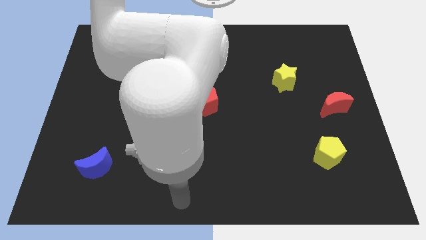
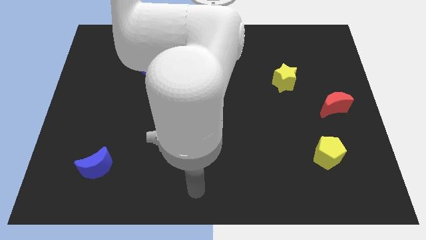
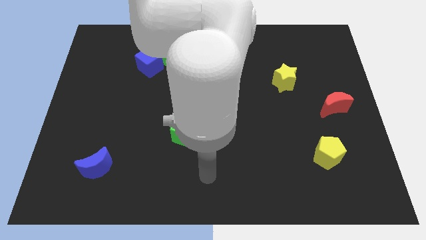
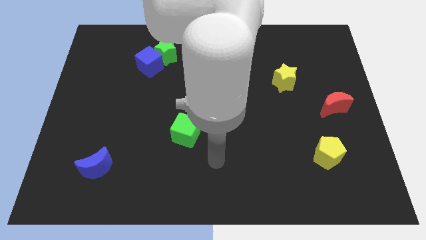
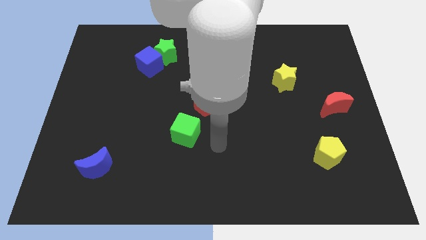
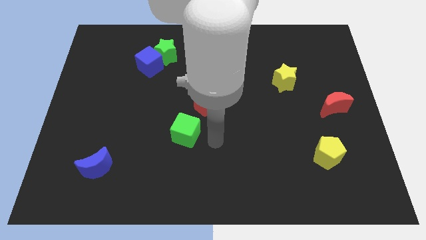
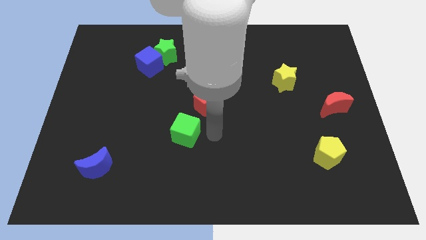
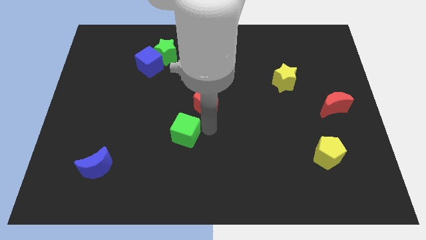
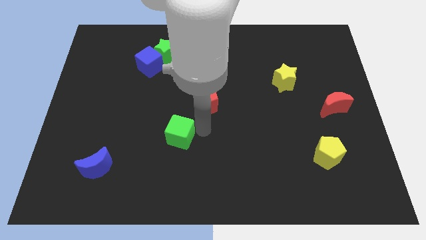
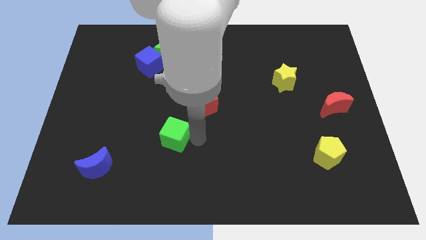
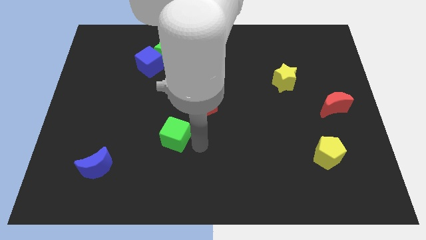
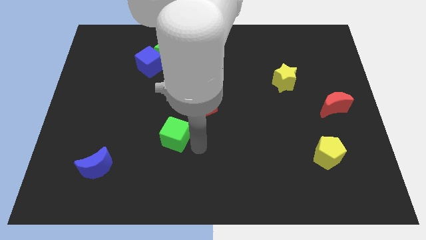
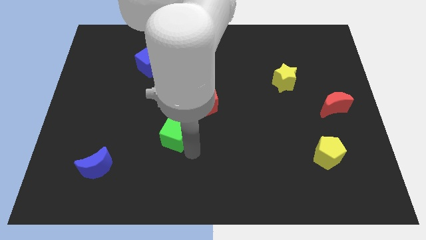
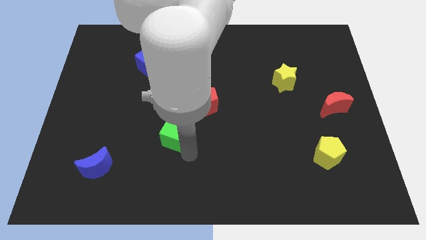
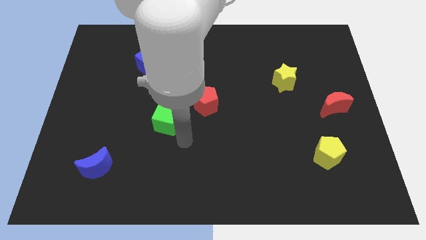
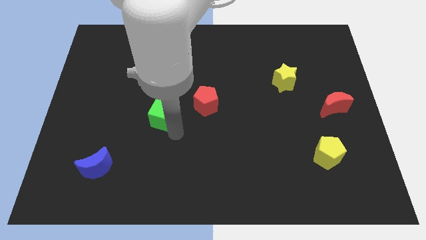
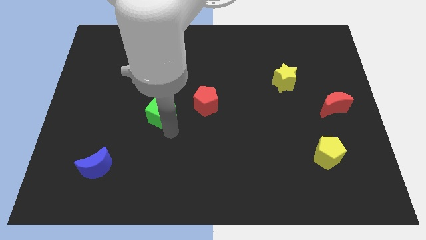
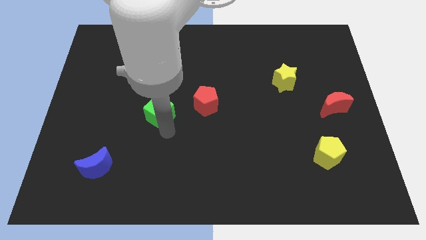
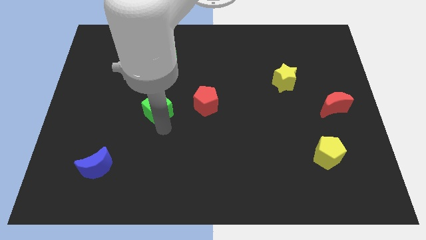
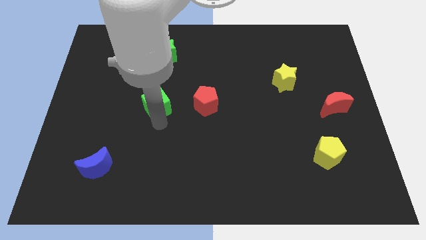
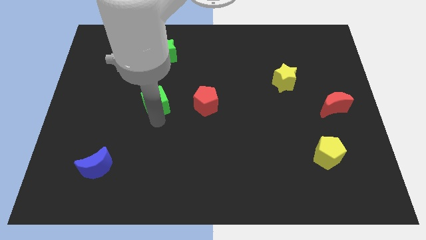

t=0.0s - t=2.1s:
place the green cube left to the red pentagon

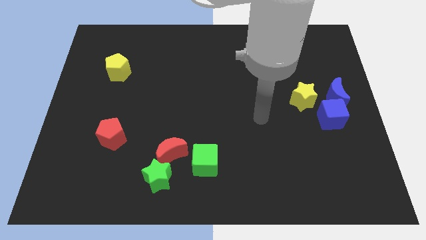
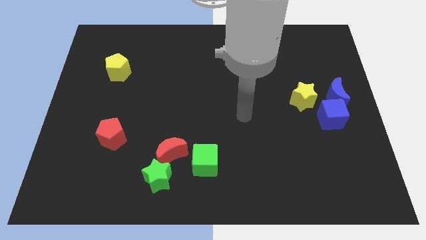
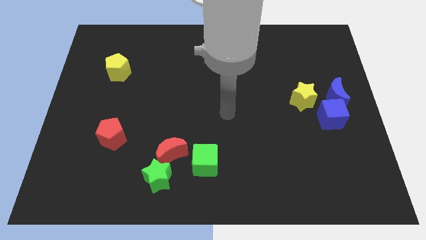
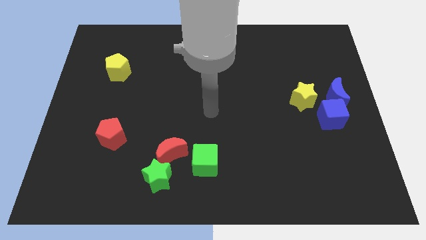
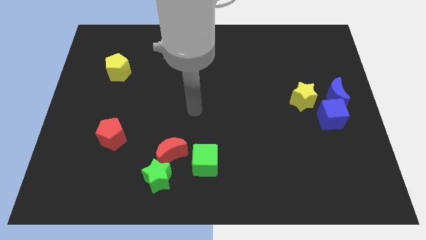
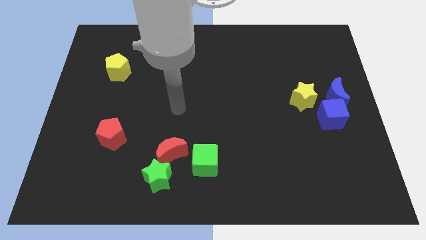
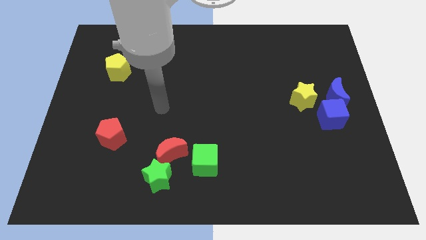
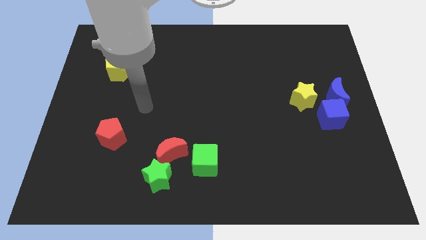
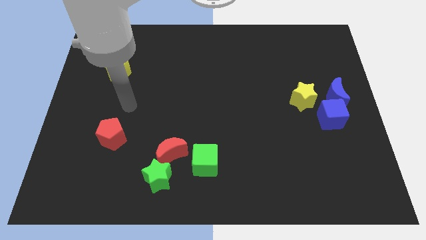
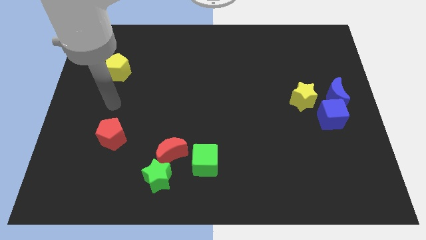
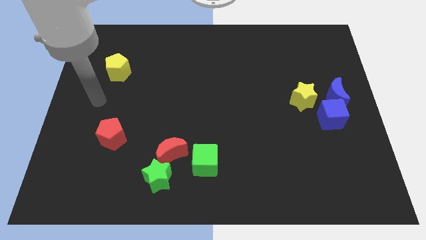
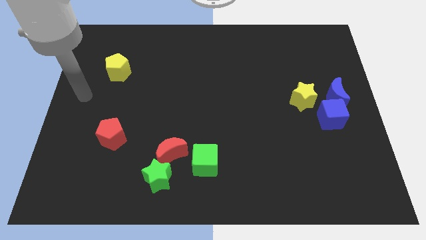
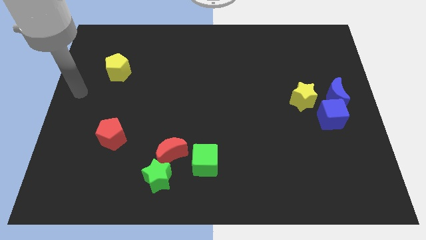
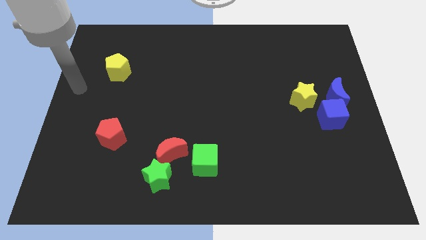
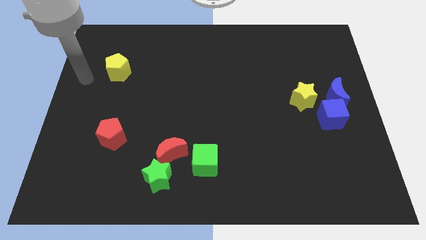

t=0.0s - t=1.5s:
move your arm to the left center of the board

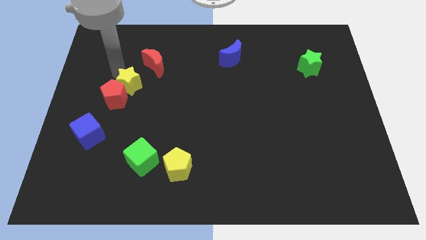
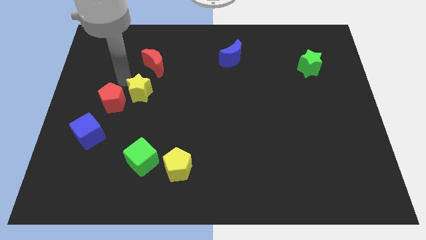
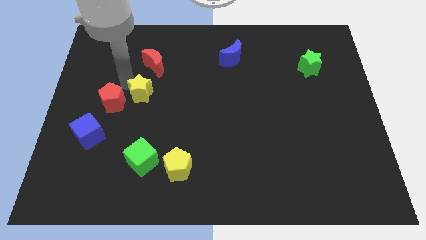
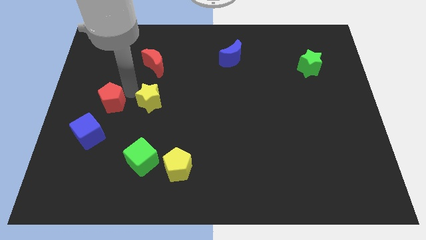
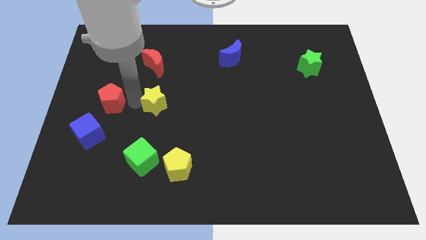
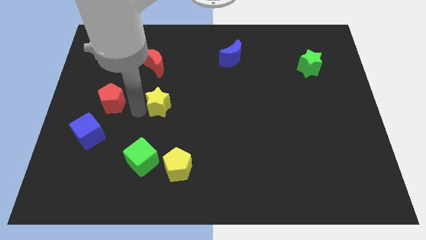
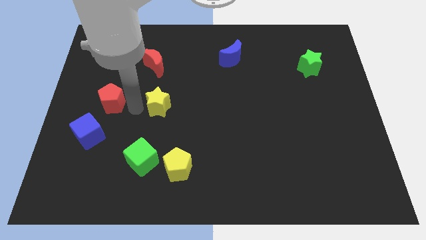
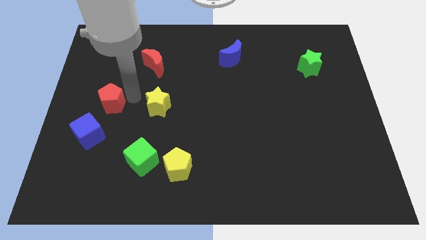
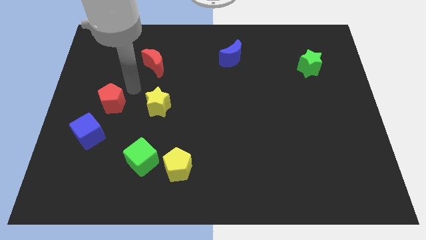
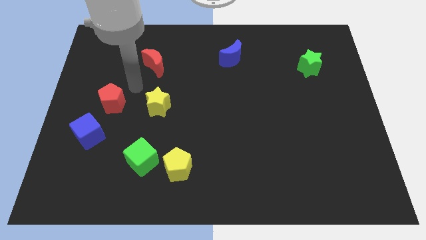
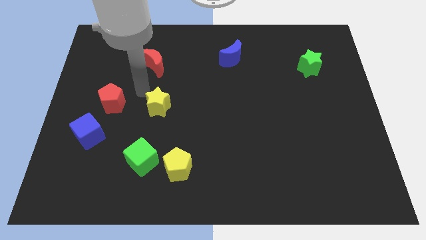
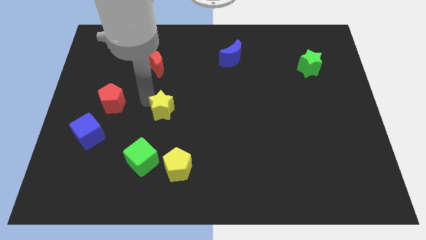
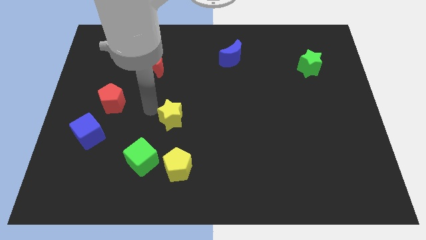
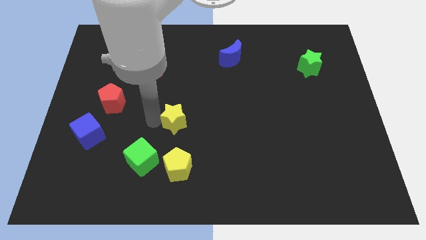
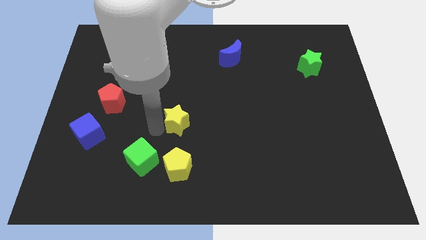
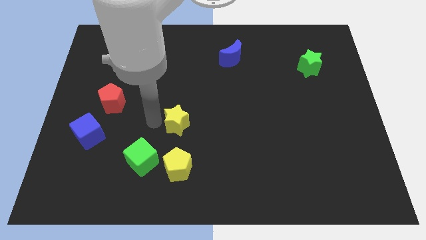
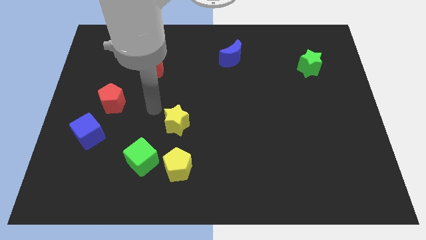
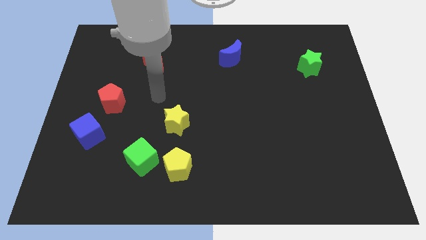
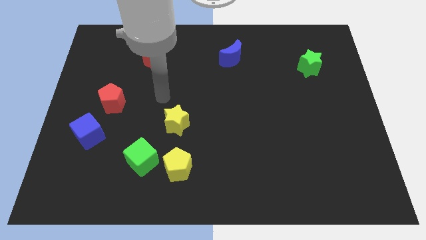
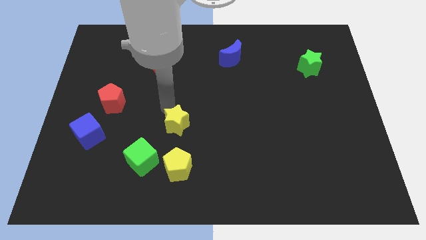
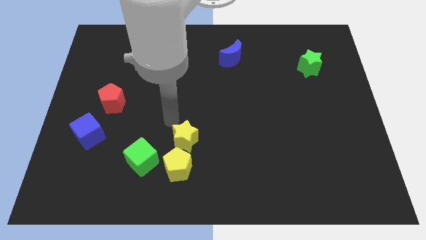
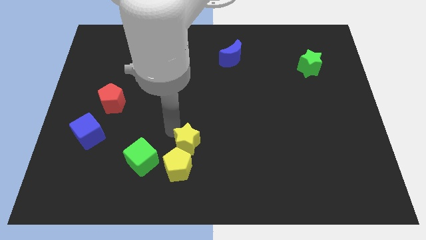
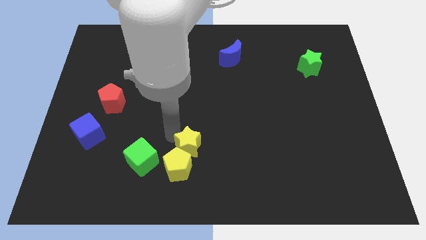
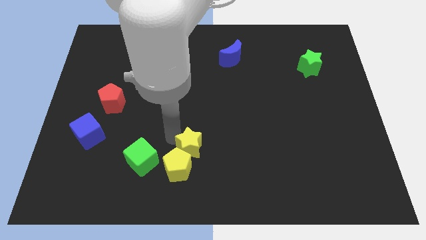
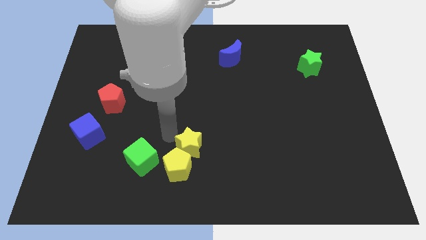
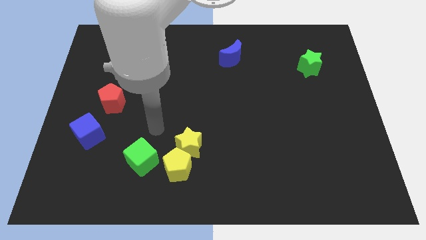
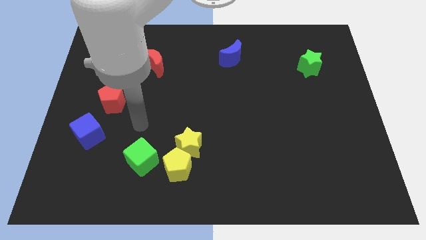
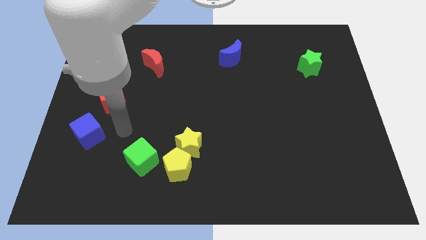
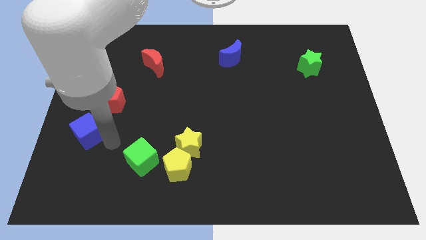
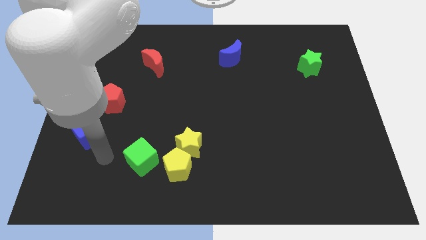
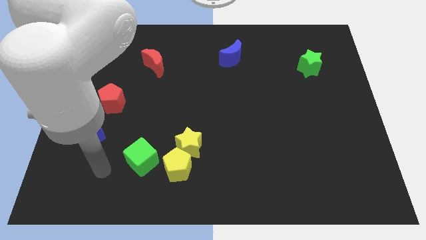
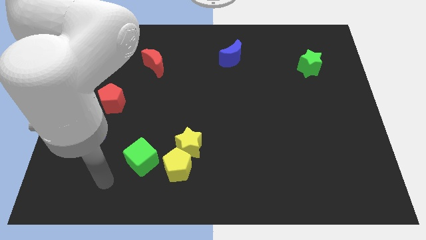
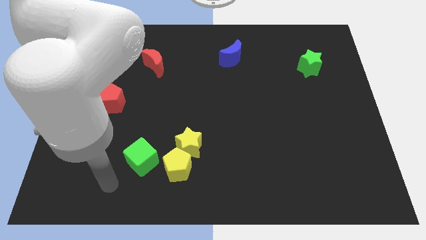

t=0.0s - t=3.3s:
move the yellow star near to the yellow pentagon

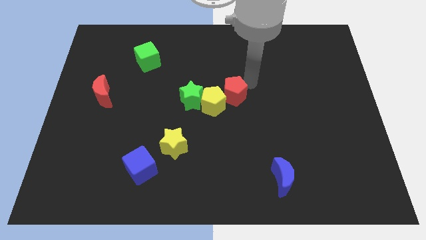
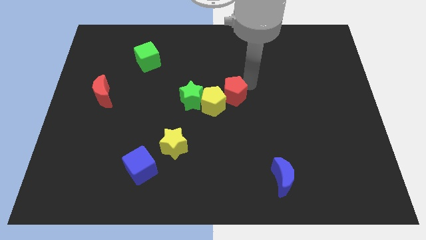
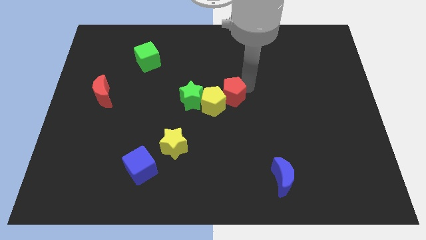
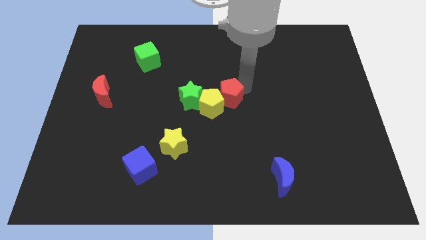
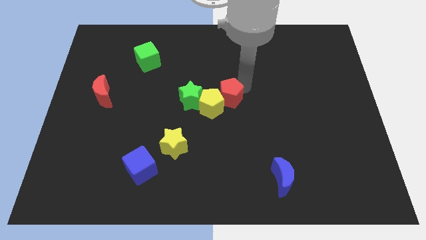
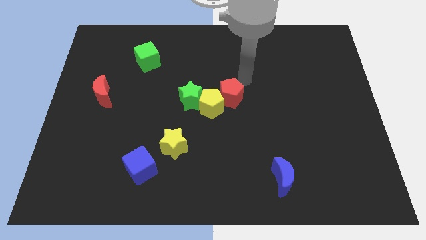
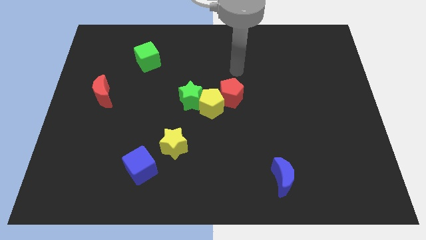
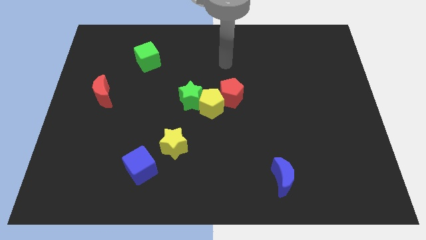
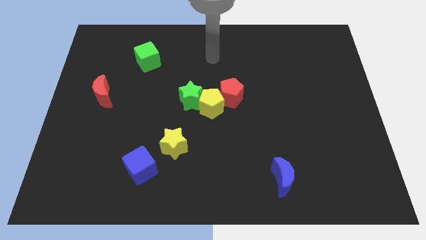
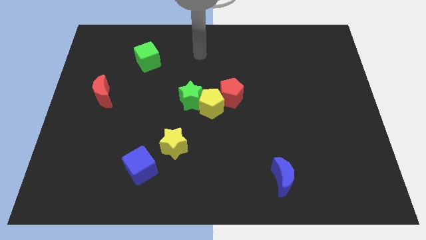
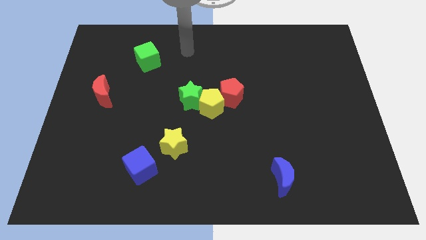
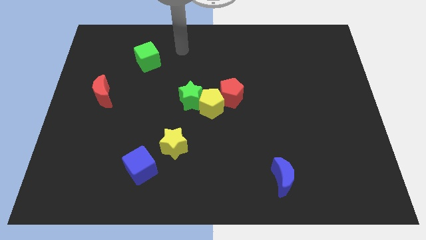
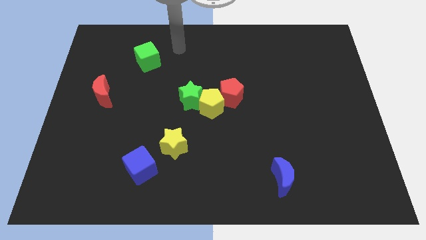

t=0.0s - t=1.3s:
push the red pentagon to the top right of the yellow pentagon

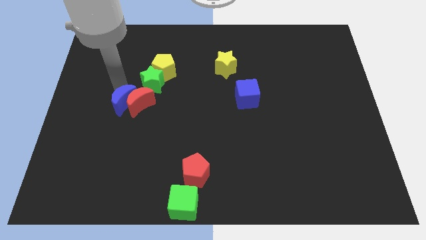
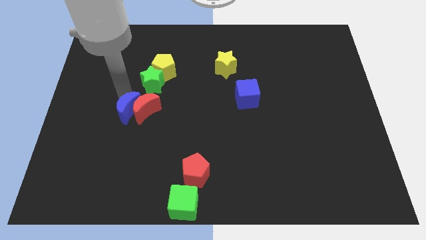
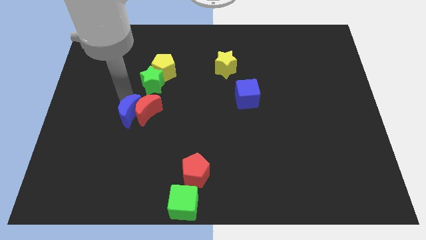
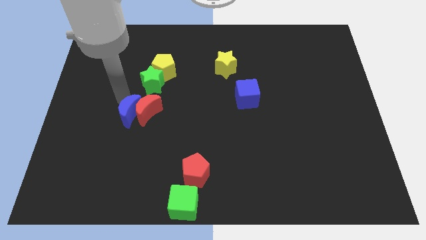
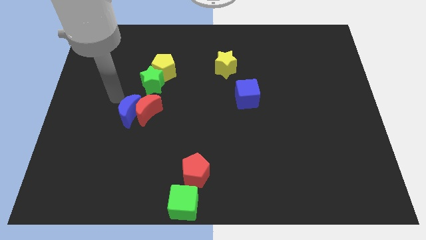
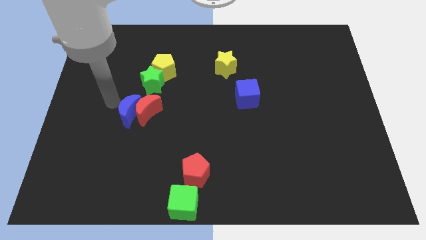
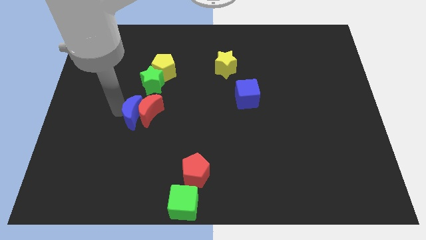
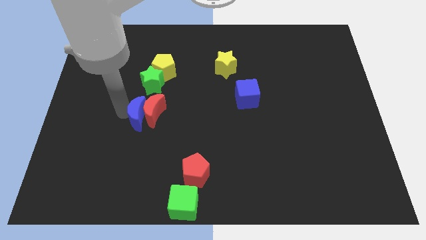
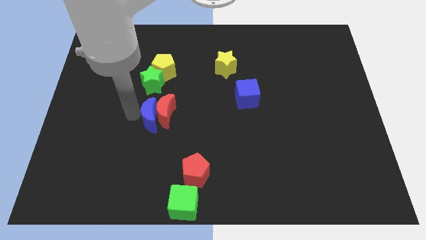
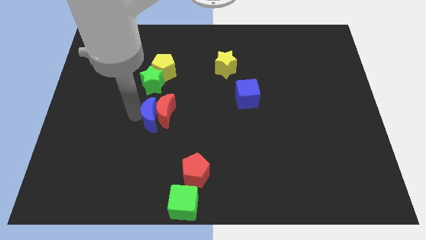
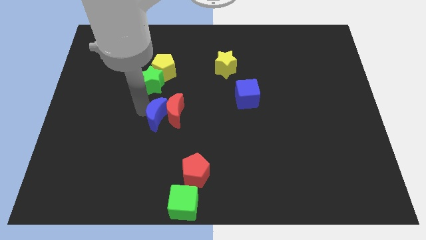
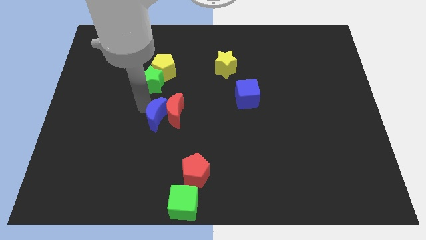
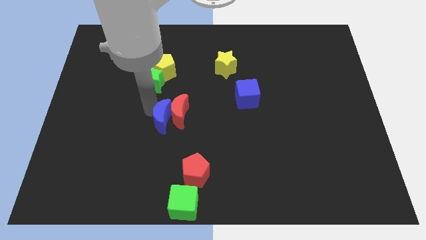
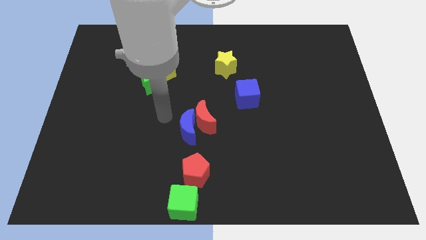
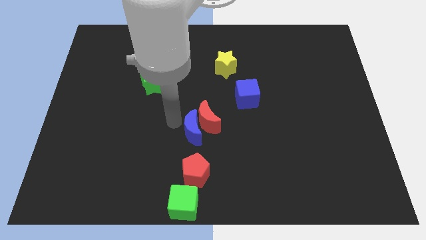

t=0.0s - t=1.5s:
push the red crescent with the blue crescent to the center of the board
